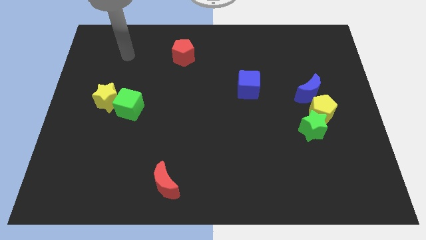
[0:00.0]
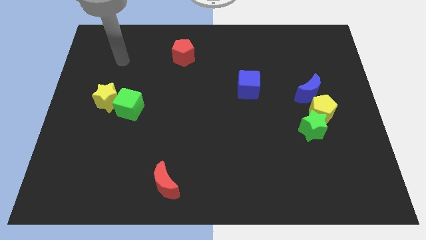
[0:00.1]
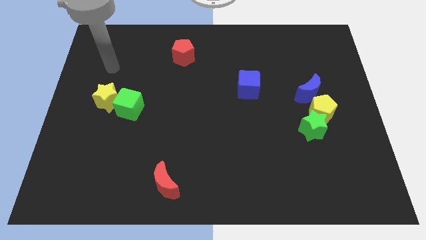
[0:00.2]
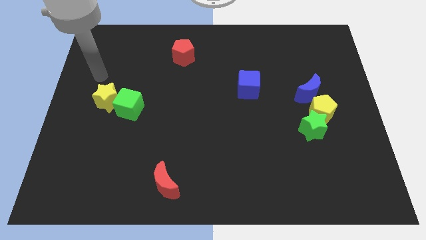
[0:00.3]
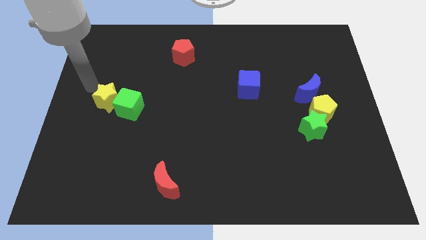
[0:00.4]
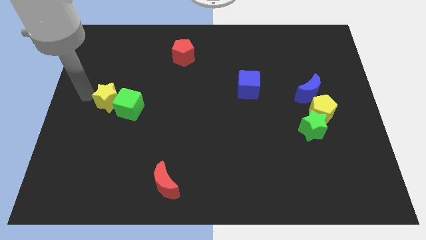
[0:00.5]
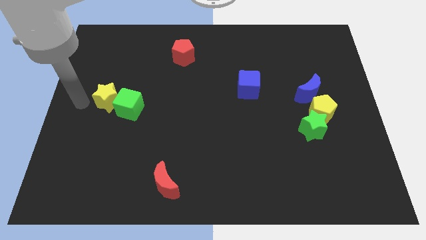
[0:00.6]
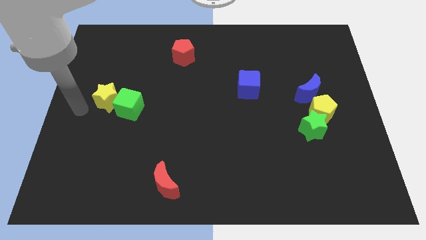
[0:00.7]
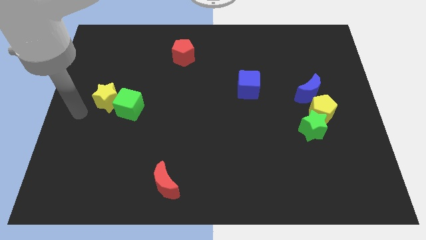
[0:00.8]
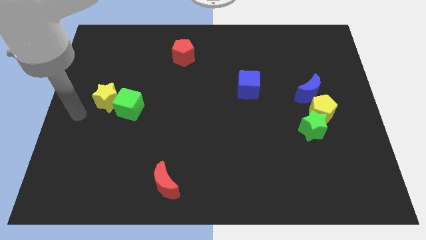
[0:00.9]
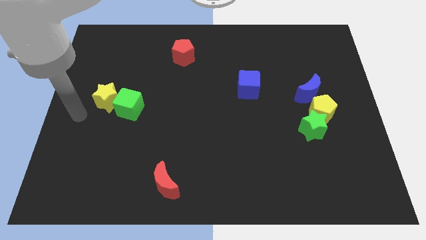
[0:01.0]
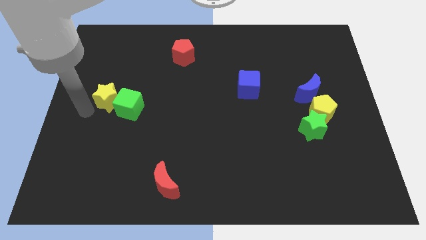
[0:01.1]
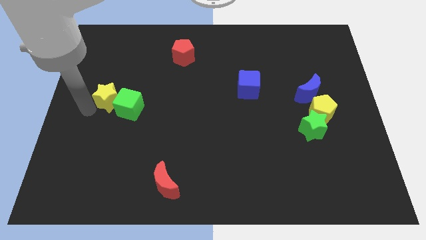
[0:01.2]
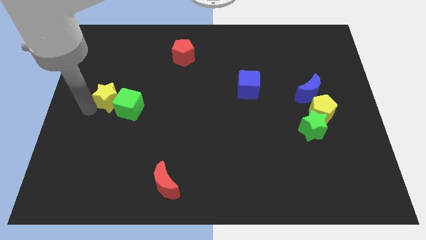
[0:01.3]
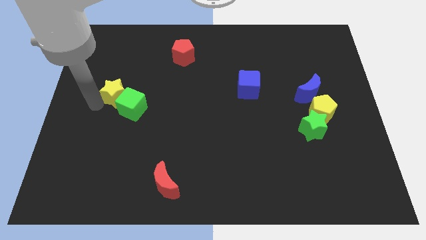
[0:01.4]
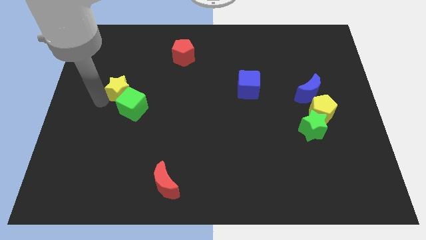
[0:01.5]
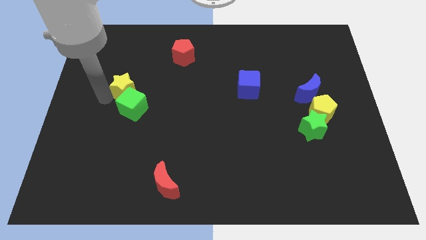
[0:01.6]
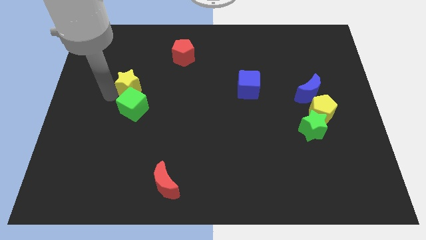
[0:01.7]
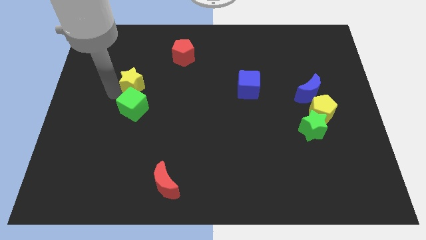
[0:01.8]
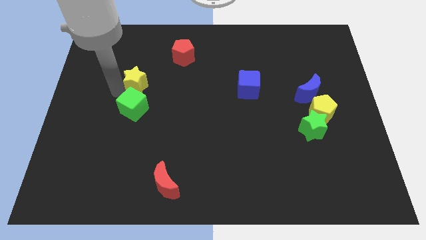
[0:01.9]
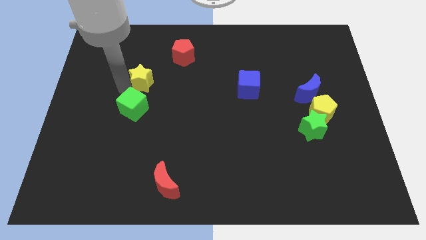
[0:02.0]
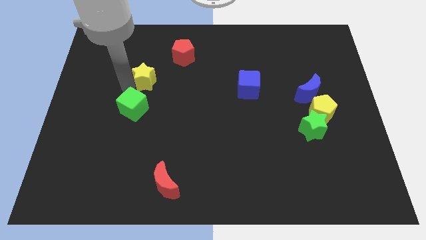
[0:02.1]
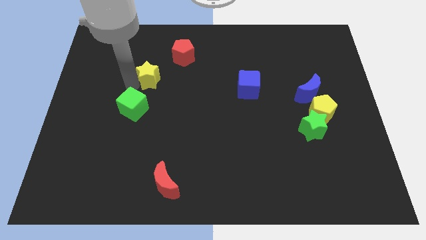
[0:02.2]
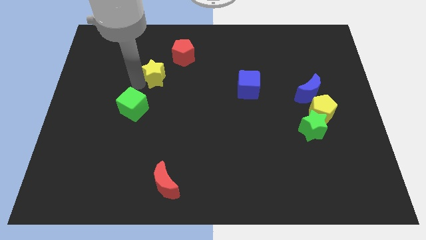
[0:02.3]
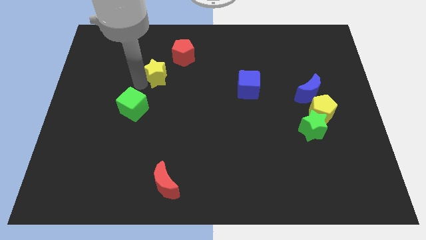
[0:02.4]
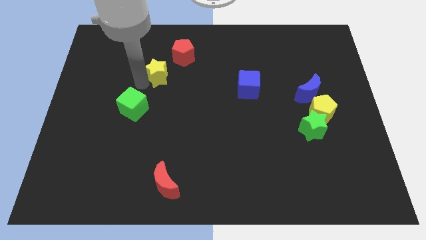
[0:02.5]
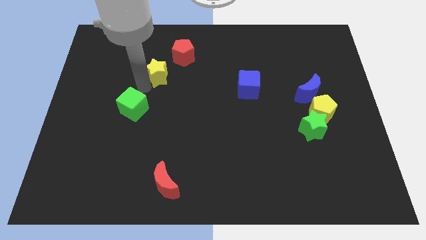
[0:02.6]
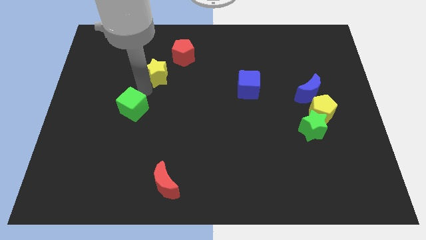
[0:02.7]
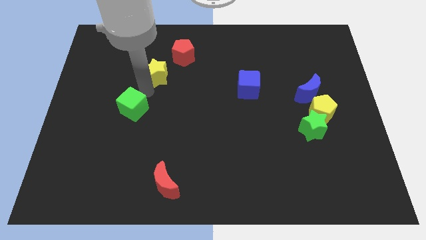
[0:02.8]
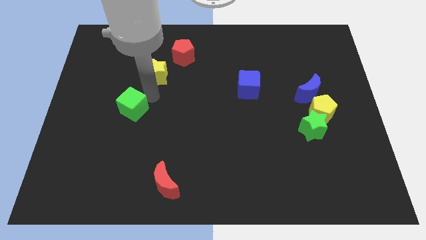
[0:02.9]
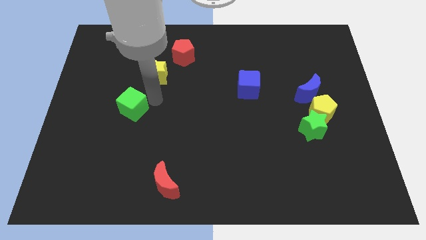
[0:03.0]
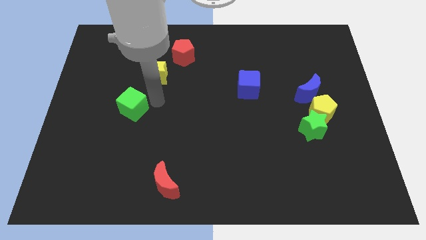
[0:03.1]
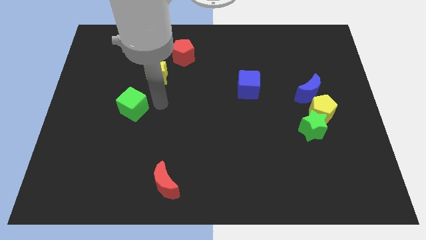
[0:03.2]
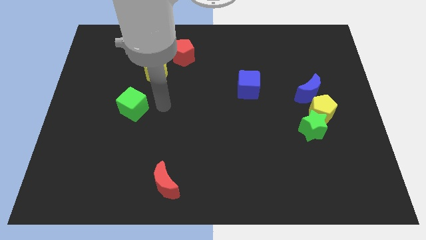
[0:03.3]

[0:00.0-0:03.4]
place the yellow star left to the blue cube

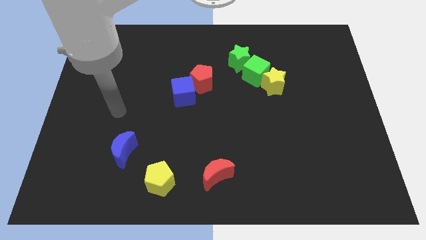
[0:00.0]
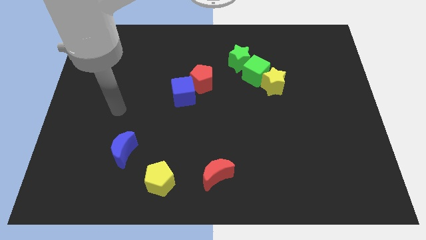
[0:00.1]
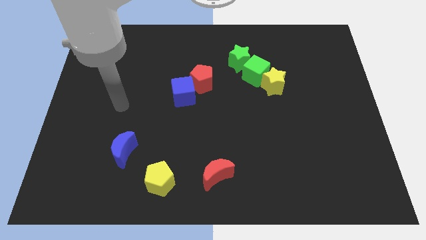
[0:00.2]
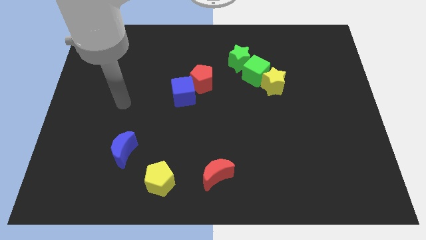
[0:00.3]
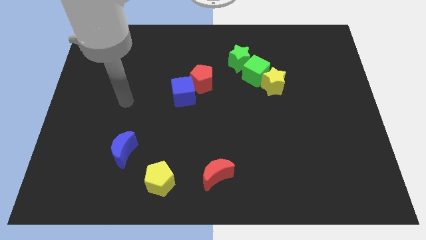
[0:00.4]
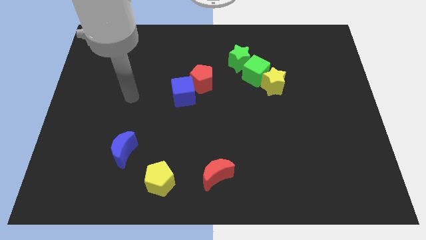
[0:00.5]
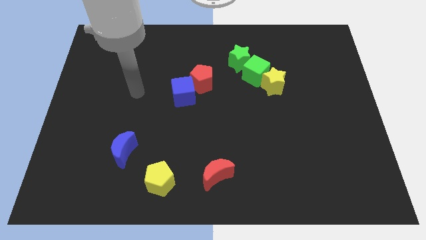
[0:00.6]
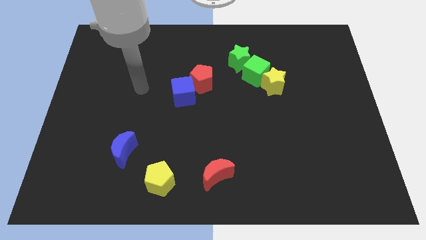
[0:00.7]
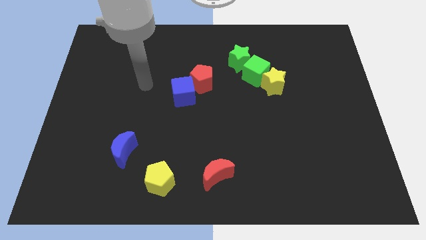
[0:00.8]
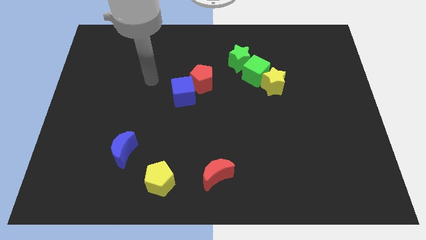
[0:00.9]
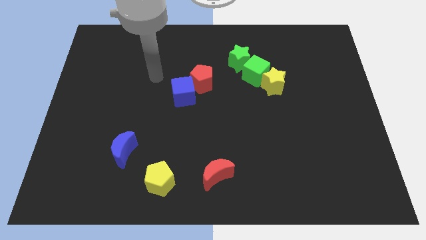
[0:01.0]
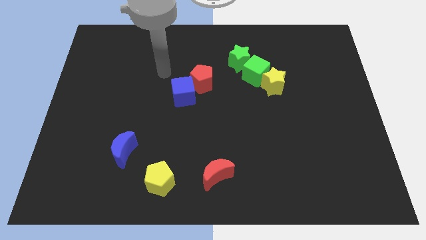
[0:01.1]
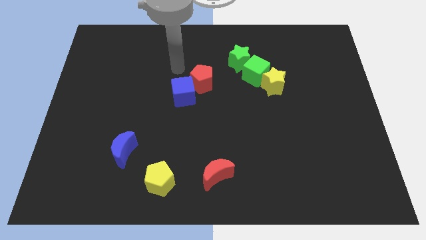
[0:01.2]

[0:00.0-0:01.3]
move your arm to top left of blue cube

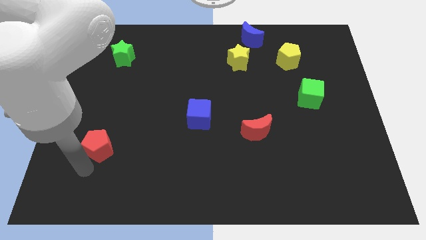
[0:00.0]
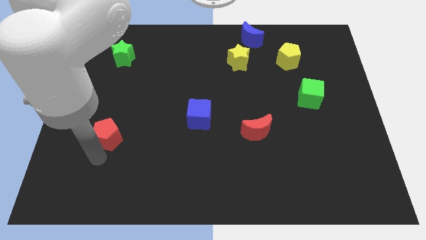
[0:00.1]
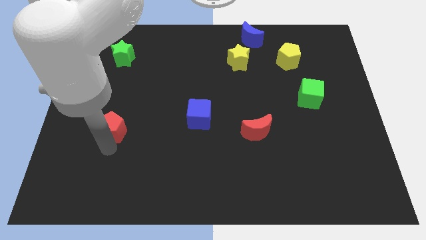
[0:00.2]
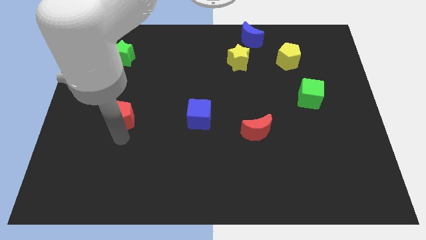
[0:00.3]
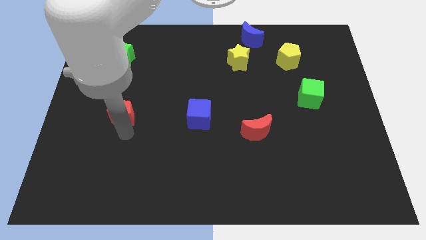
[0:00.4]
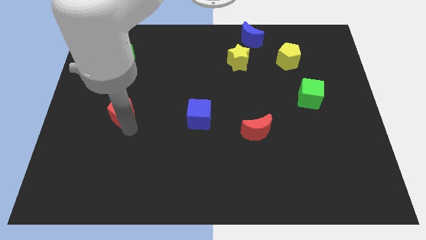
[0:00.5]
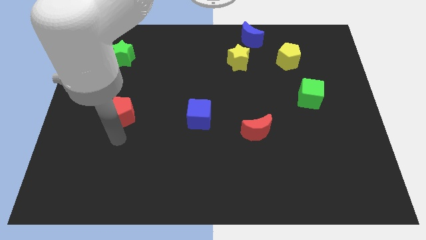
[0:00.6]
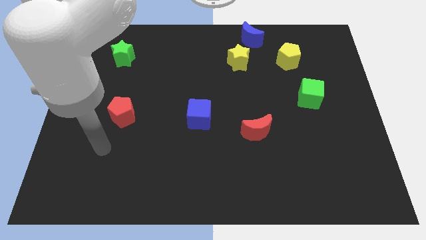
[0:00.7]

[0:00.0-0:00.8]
place the red pentagon horizontally to the left side of the blue cube

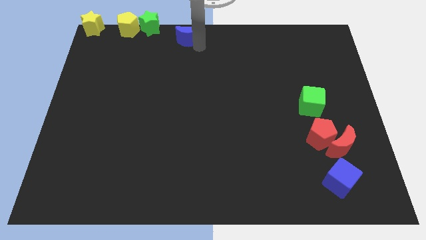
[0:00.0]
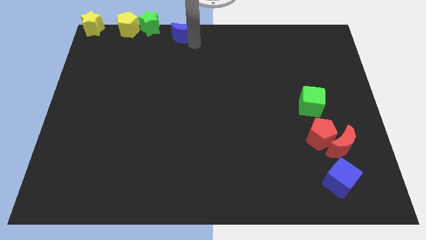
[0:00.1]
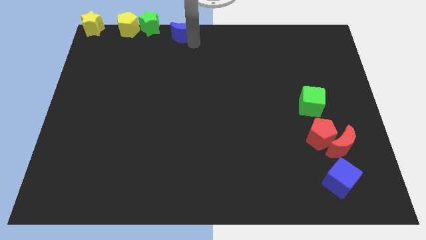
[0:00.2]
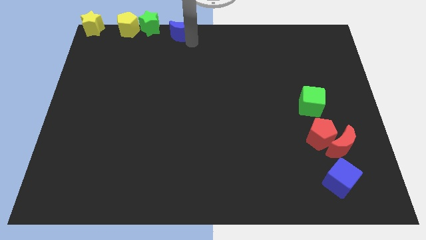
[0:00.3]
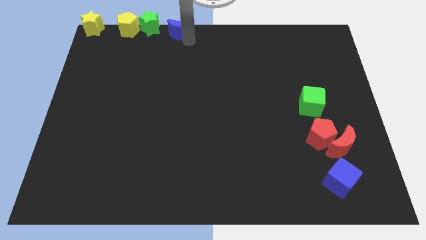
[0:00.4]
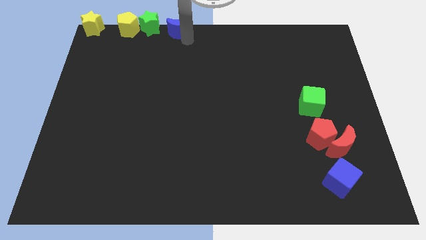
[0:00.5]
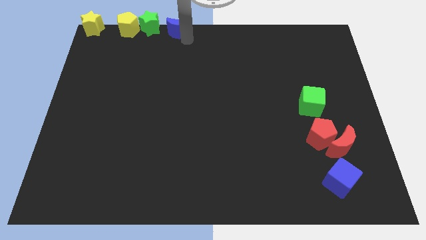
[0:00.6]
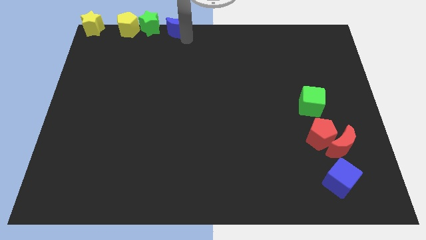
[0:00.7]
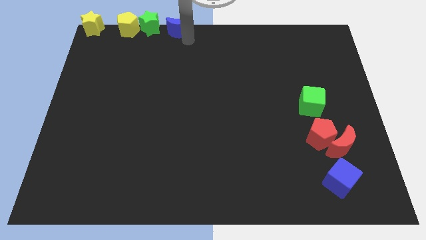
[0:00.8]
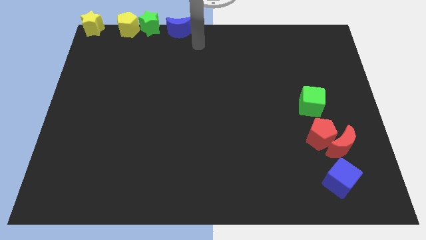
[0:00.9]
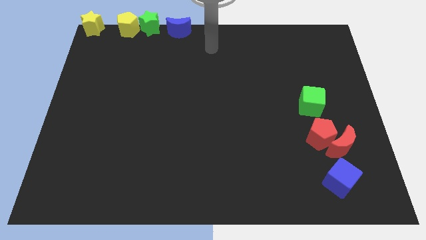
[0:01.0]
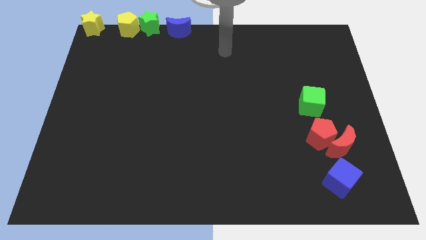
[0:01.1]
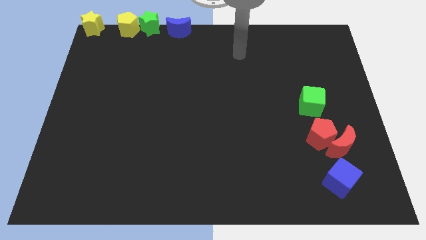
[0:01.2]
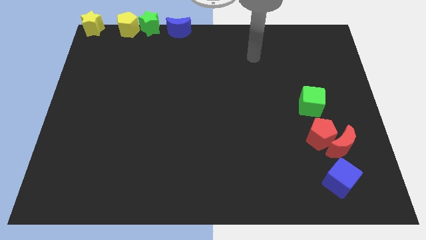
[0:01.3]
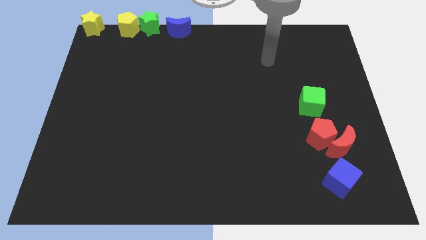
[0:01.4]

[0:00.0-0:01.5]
move the blue moon to the right of the green star

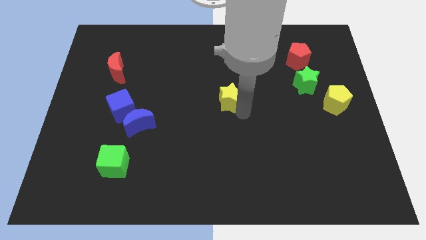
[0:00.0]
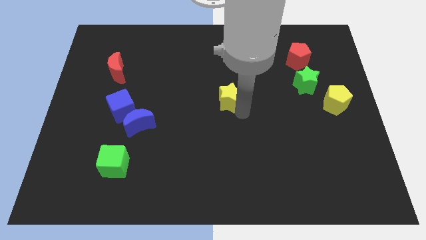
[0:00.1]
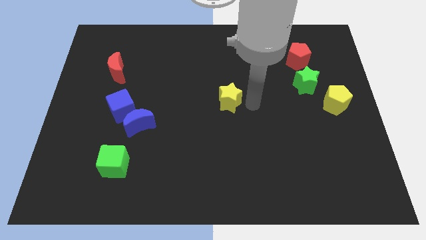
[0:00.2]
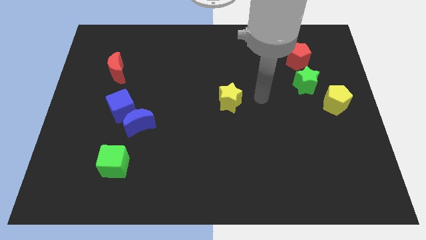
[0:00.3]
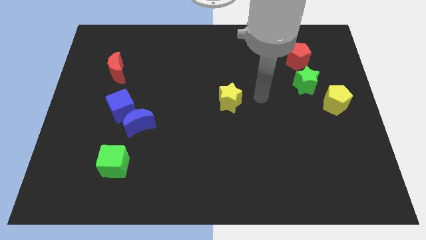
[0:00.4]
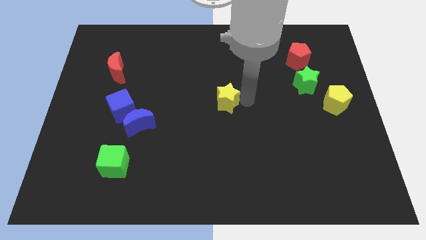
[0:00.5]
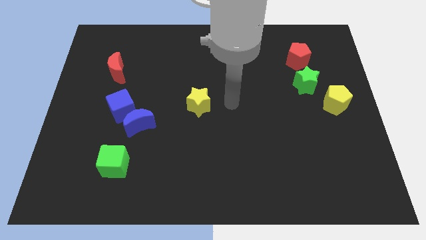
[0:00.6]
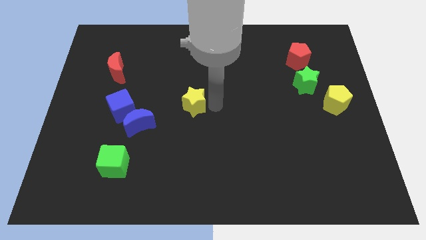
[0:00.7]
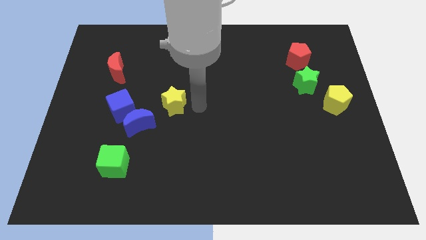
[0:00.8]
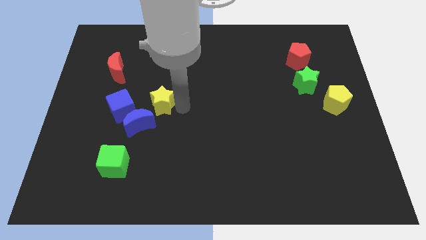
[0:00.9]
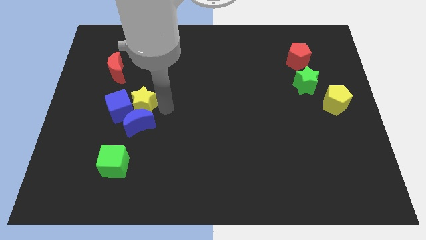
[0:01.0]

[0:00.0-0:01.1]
push the yellow star to the top of the blue crescent

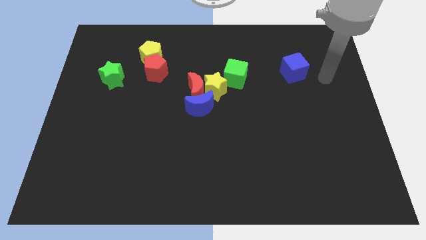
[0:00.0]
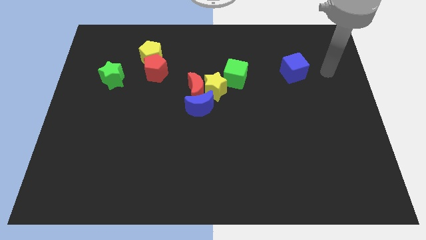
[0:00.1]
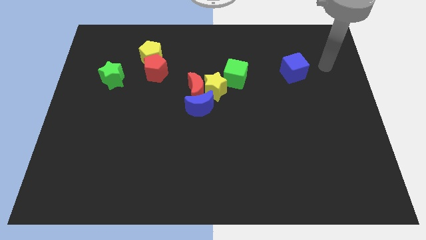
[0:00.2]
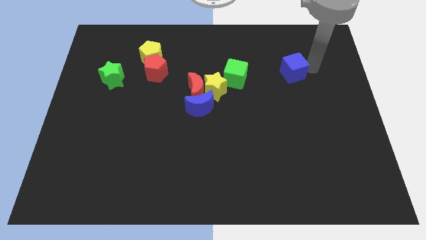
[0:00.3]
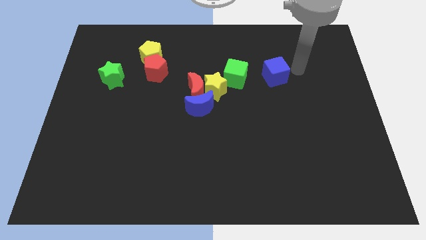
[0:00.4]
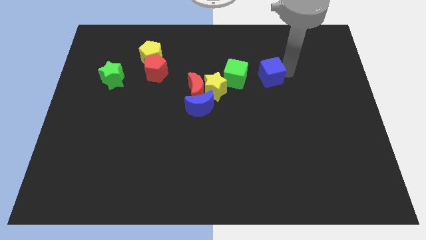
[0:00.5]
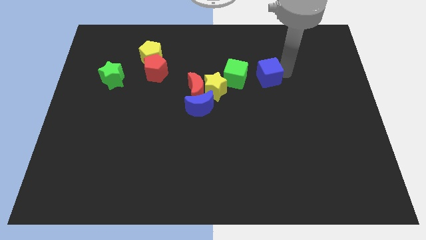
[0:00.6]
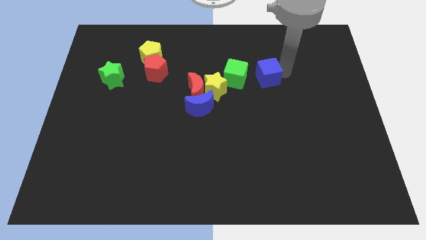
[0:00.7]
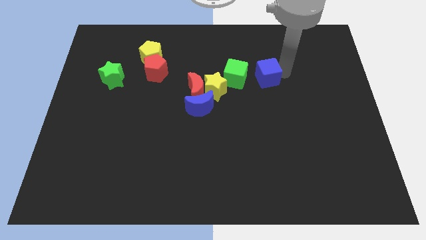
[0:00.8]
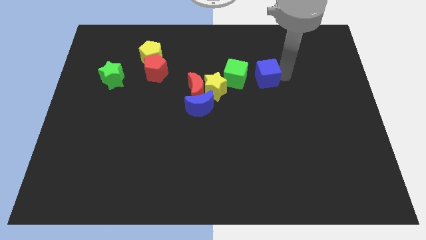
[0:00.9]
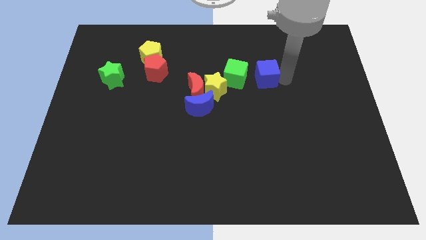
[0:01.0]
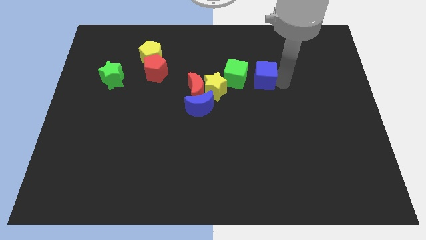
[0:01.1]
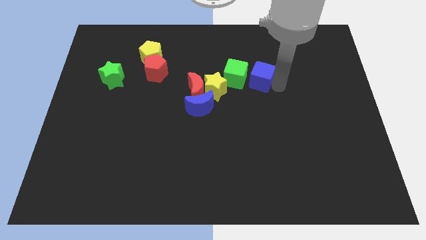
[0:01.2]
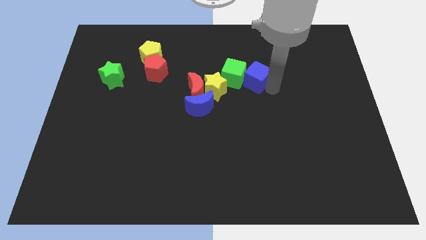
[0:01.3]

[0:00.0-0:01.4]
attach the blue cube and the green cube
